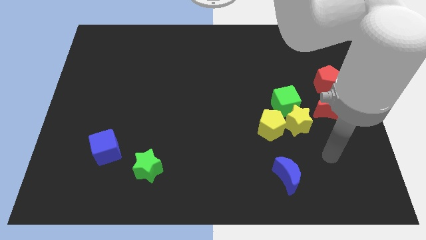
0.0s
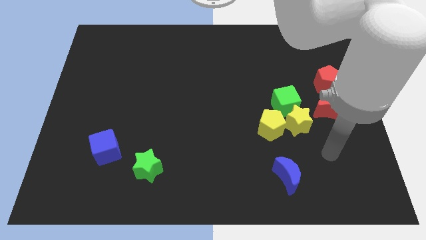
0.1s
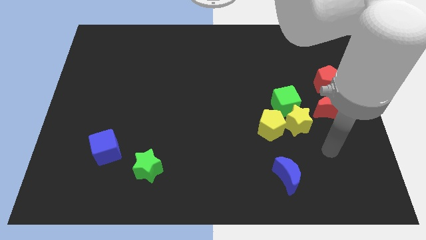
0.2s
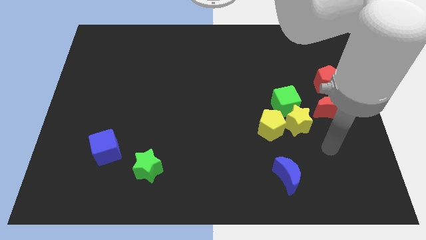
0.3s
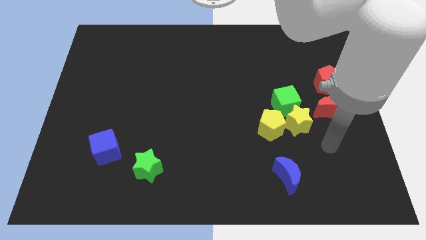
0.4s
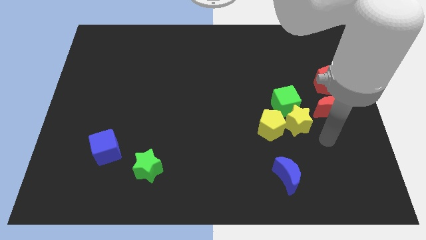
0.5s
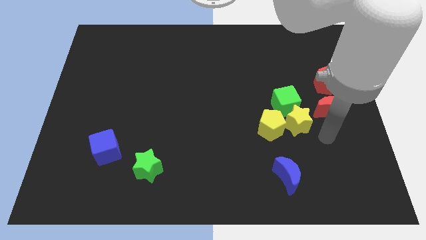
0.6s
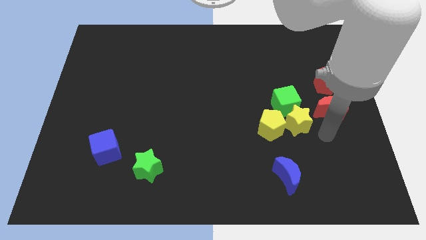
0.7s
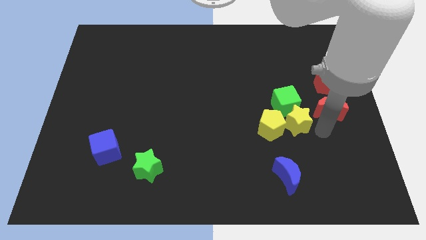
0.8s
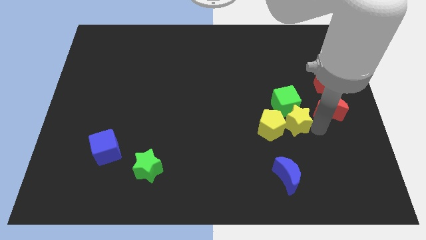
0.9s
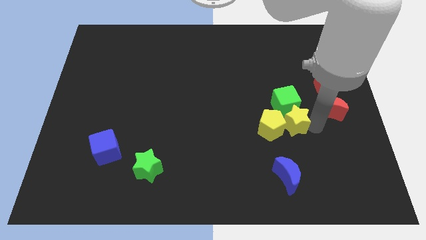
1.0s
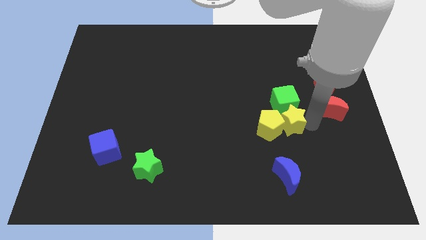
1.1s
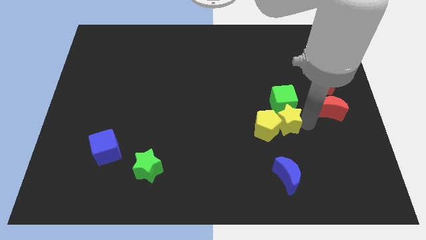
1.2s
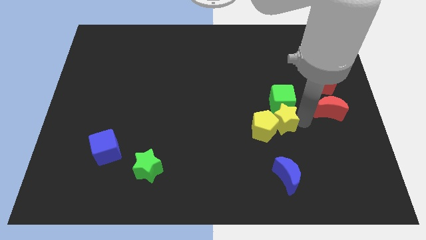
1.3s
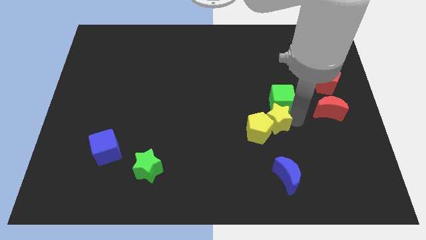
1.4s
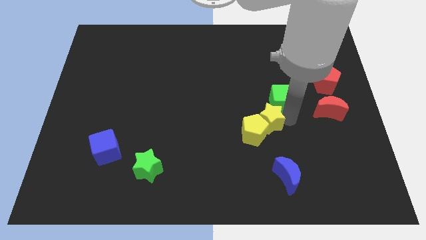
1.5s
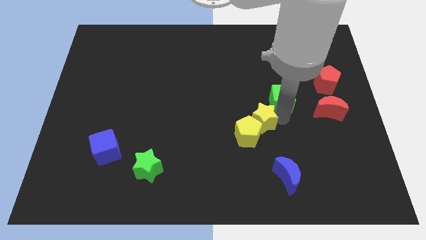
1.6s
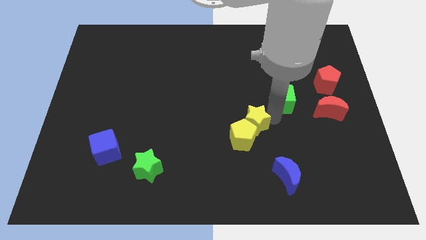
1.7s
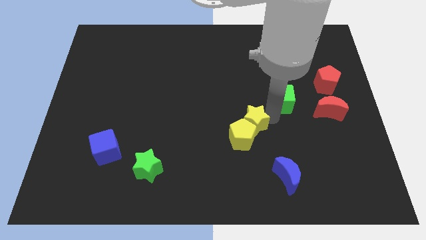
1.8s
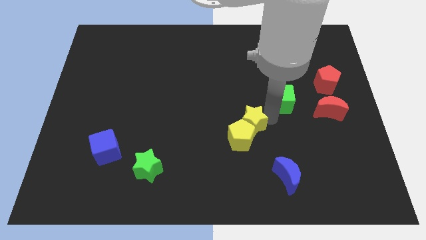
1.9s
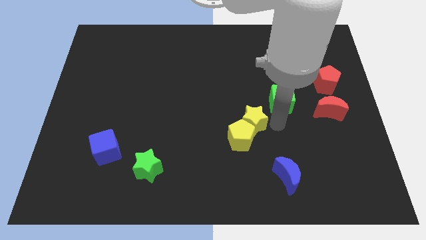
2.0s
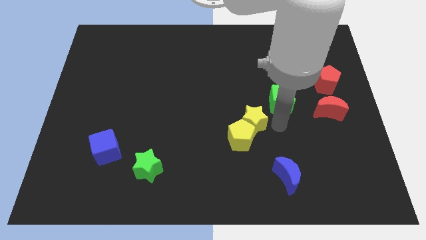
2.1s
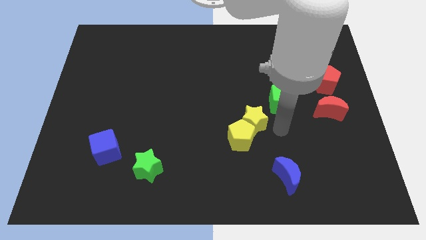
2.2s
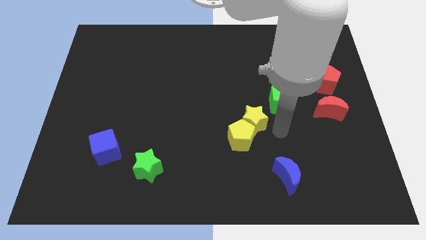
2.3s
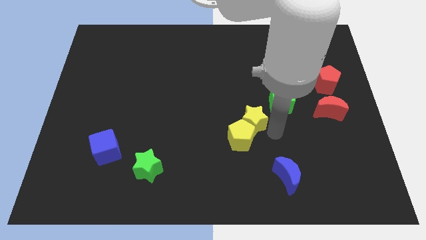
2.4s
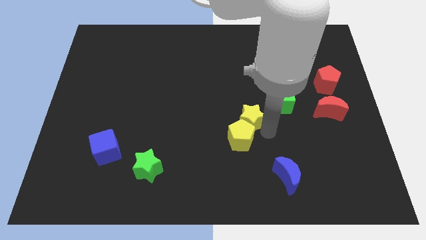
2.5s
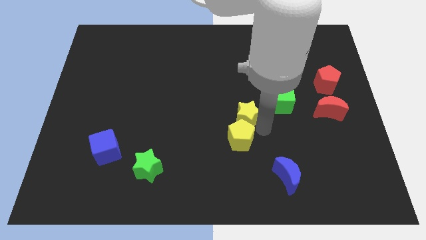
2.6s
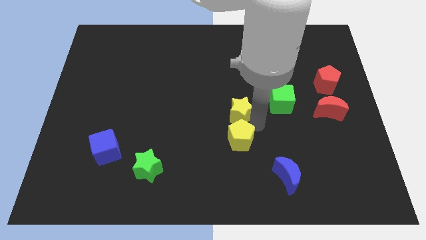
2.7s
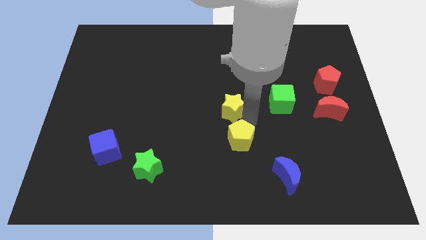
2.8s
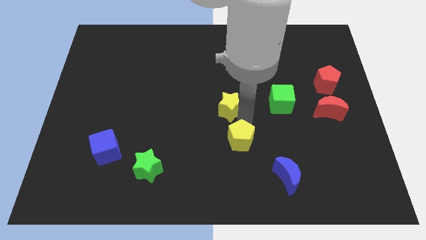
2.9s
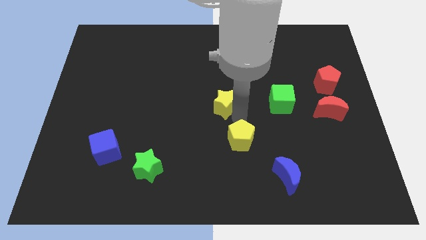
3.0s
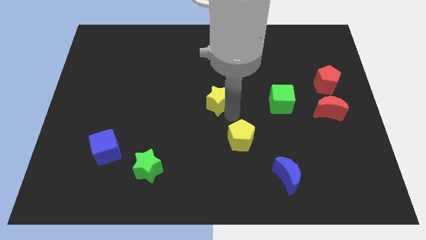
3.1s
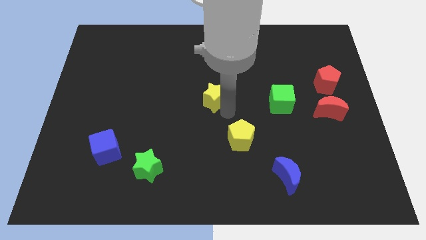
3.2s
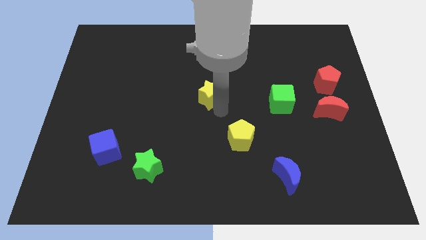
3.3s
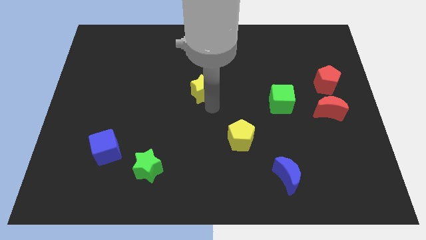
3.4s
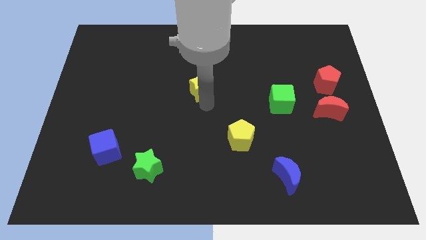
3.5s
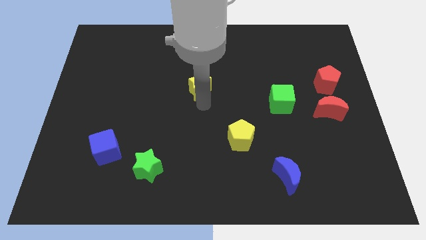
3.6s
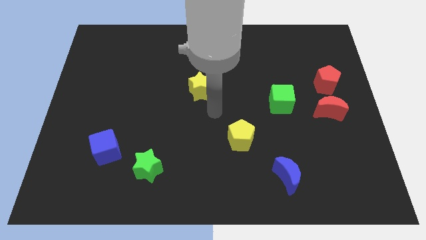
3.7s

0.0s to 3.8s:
separate yellow blocks

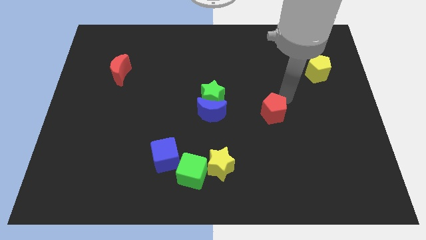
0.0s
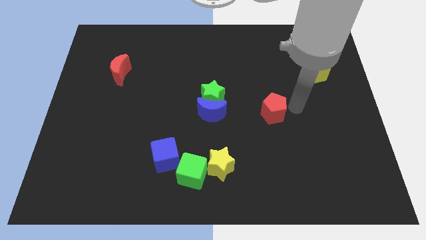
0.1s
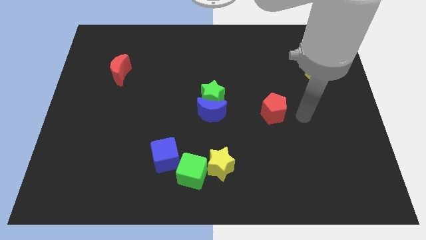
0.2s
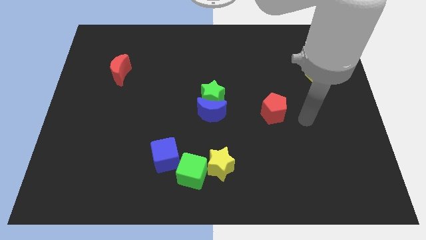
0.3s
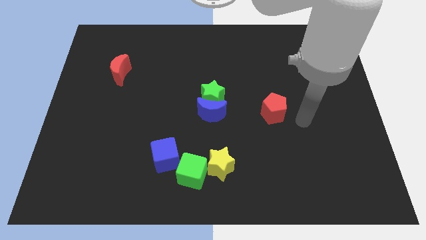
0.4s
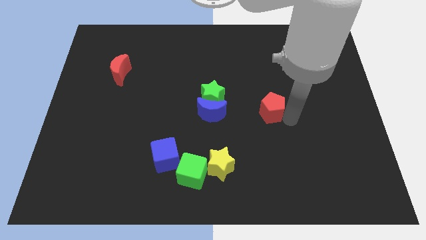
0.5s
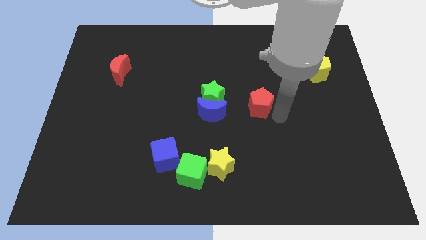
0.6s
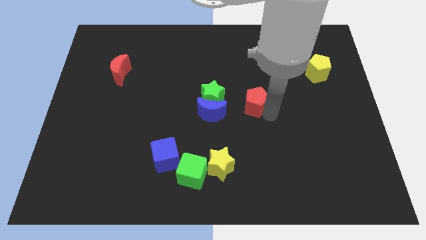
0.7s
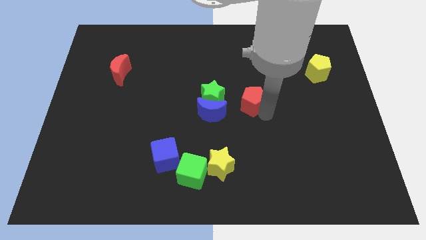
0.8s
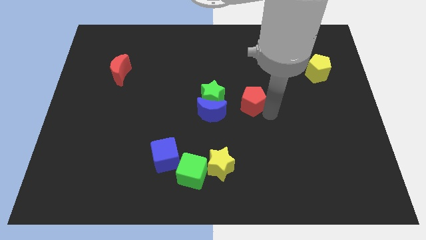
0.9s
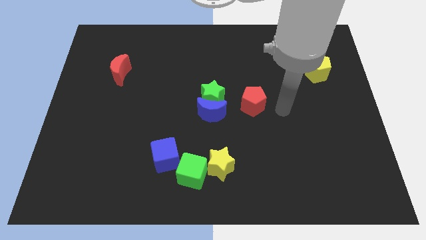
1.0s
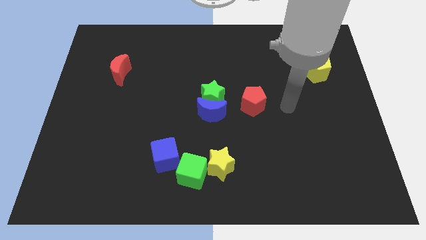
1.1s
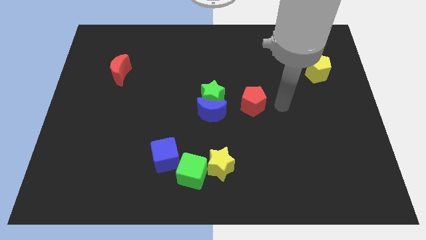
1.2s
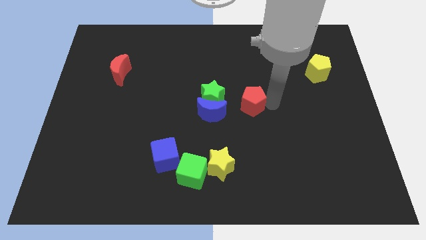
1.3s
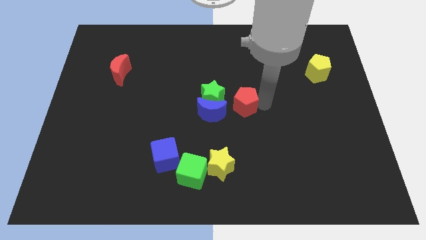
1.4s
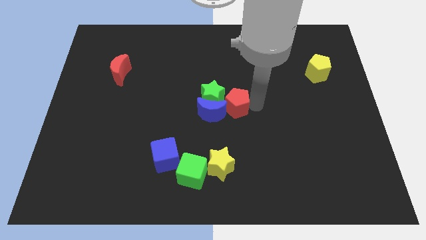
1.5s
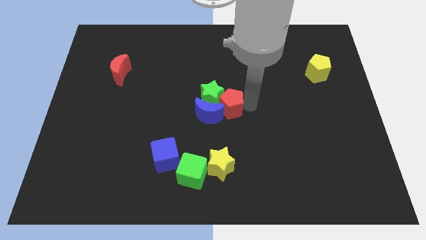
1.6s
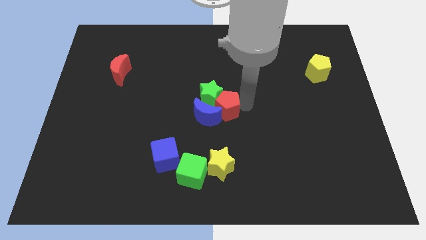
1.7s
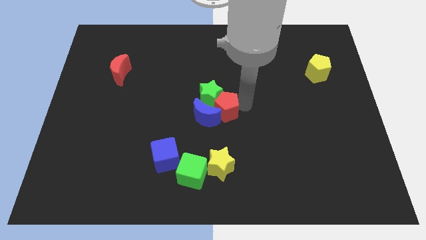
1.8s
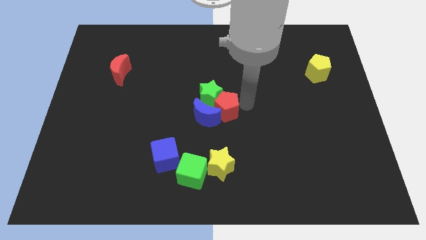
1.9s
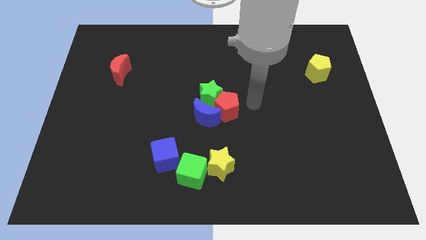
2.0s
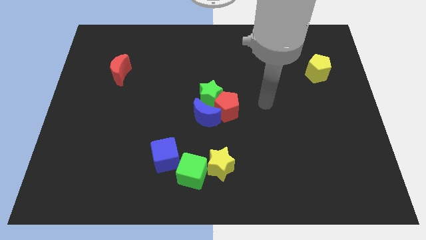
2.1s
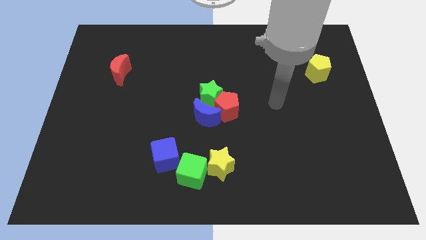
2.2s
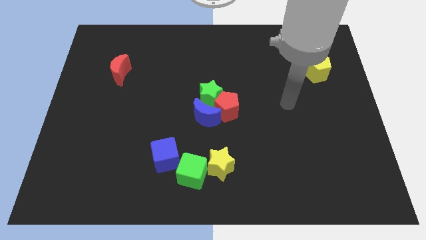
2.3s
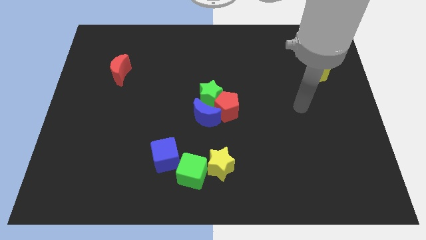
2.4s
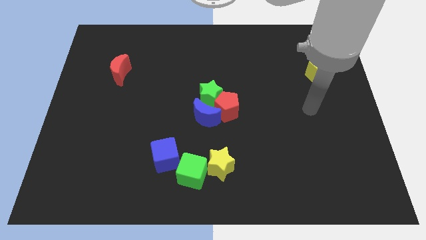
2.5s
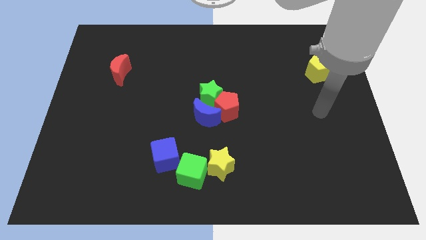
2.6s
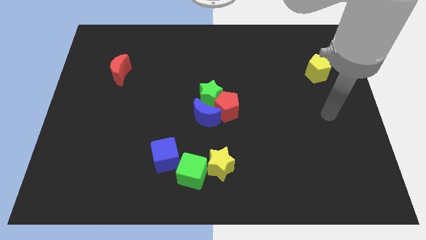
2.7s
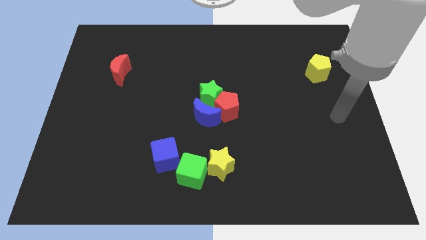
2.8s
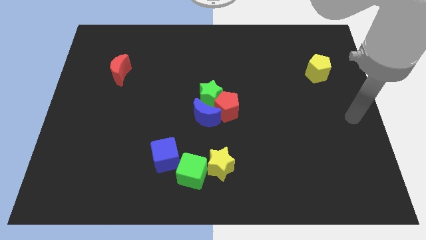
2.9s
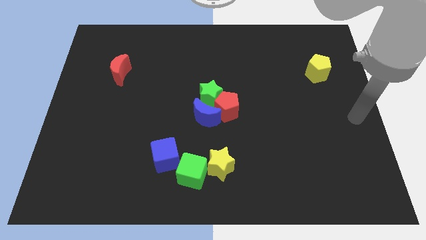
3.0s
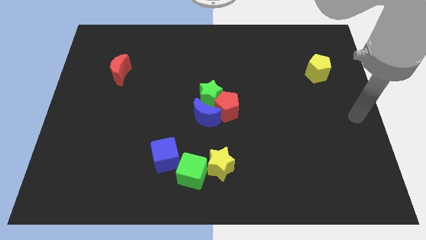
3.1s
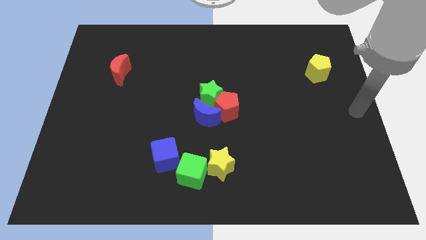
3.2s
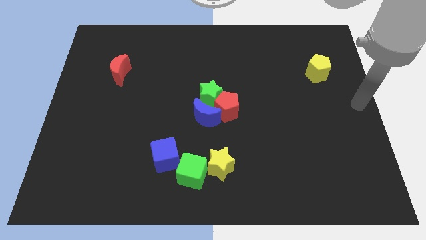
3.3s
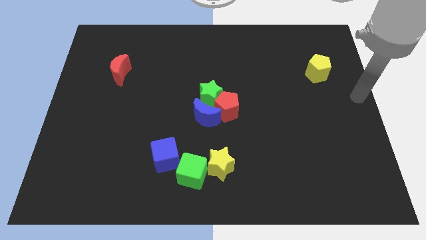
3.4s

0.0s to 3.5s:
push red pentagon into the group of blocks

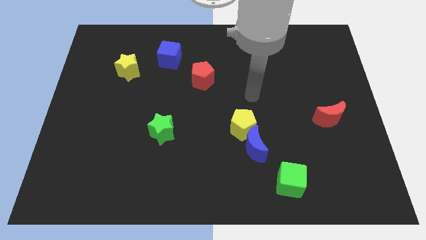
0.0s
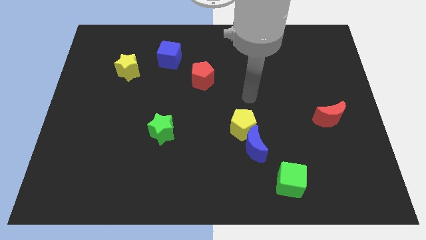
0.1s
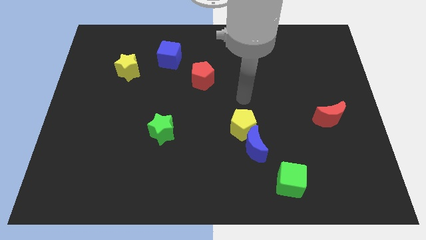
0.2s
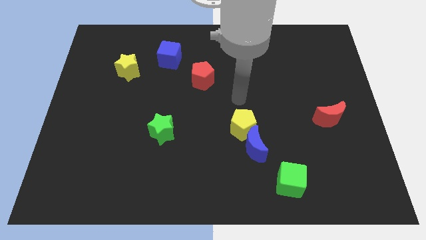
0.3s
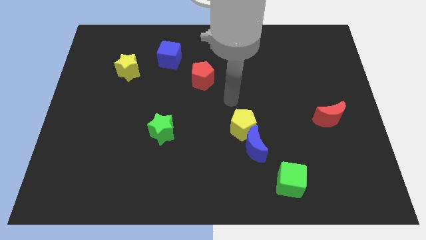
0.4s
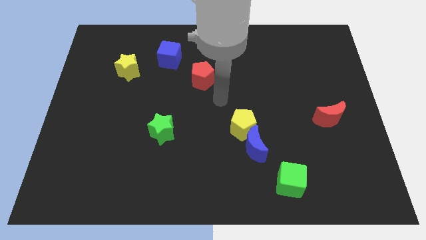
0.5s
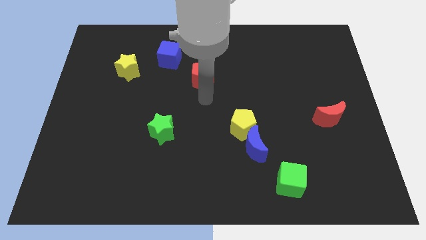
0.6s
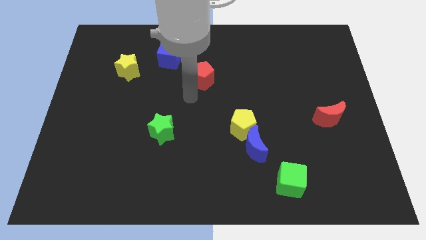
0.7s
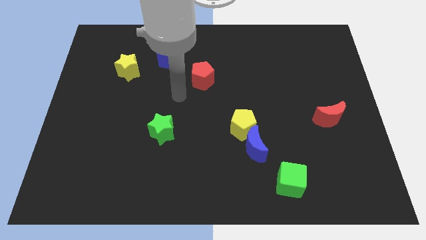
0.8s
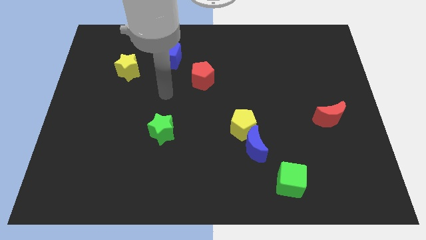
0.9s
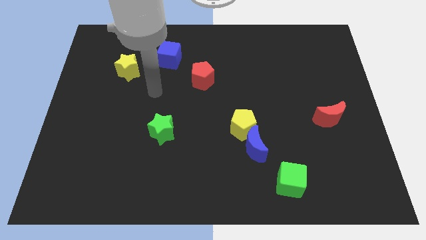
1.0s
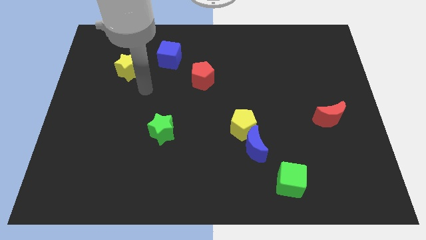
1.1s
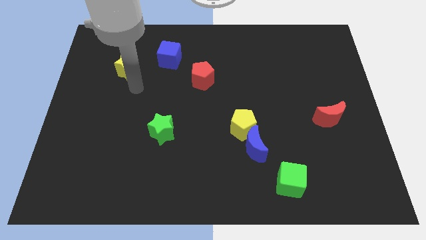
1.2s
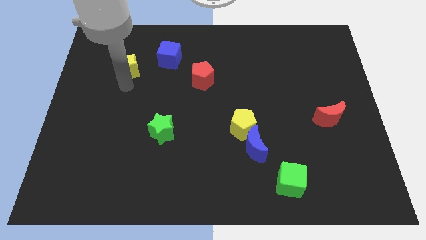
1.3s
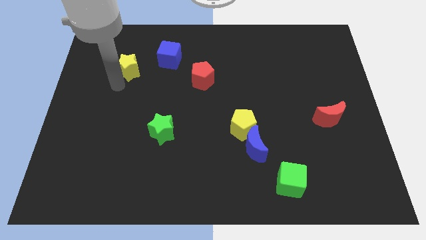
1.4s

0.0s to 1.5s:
place your arm to the bottom left side of the yellow star

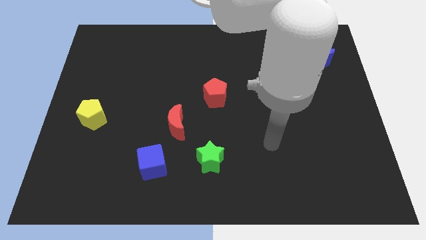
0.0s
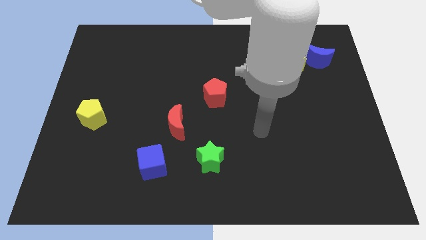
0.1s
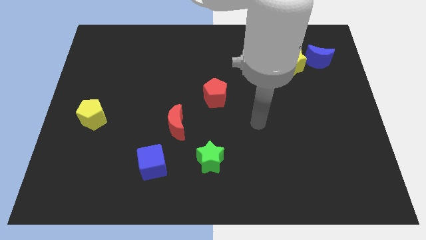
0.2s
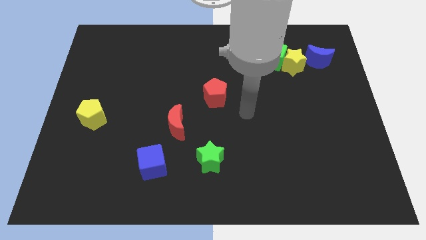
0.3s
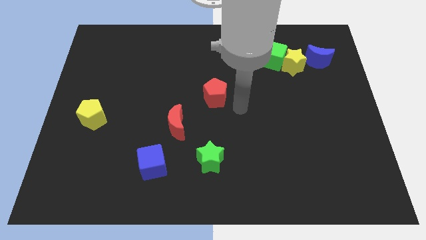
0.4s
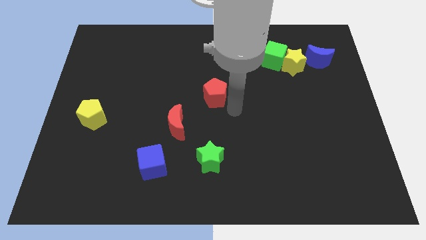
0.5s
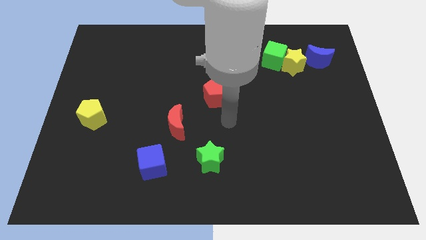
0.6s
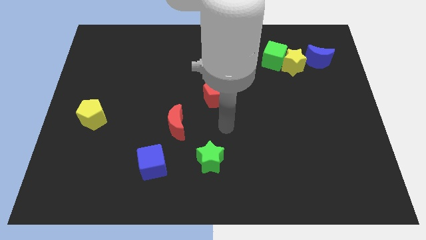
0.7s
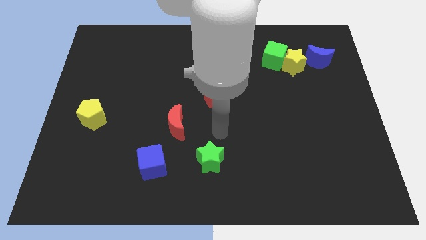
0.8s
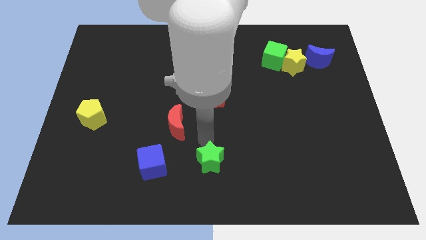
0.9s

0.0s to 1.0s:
move arm below red pentagon
